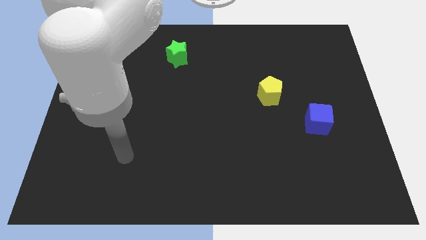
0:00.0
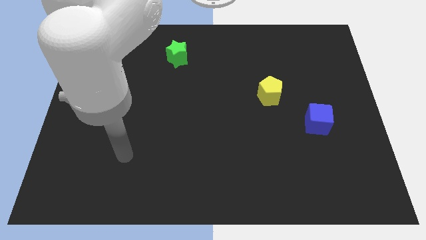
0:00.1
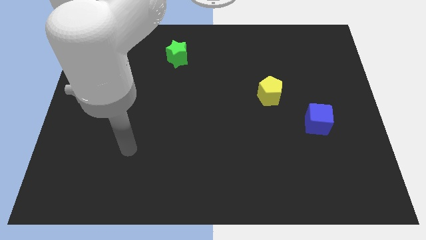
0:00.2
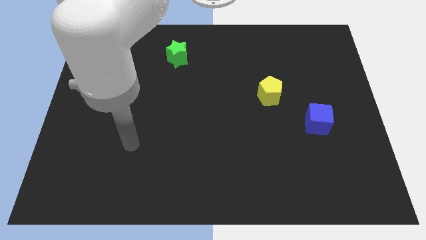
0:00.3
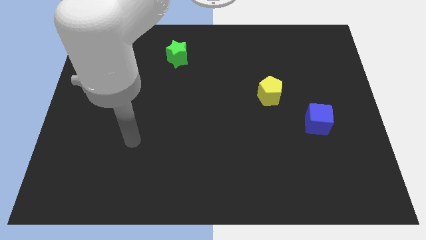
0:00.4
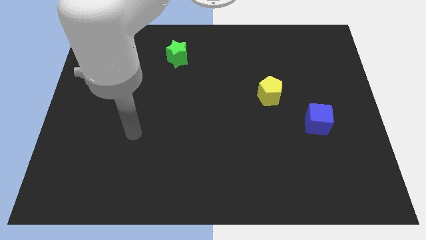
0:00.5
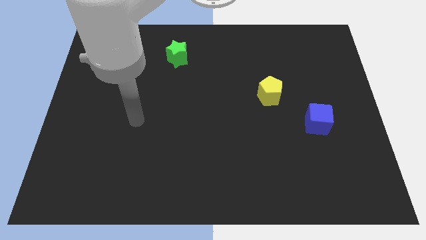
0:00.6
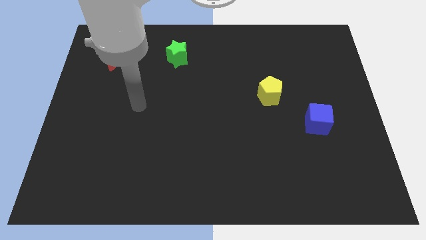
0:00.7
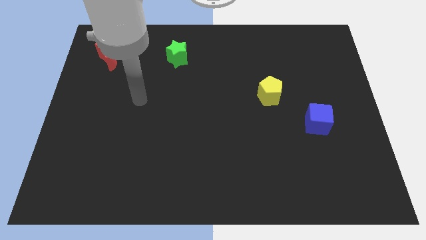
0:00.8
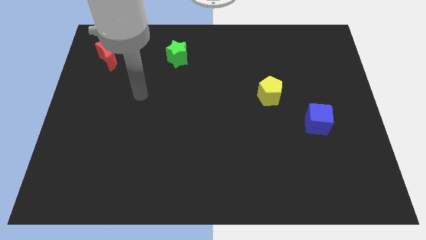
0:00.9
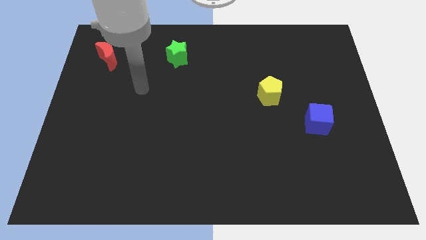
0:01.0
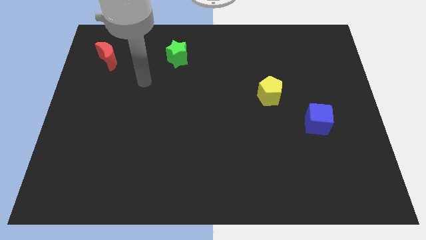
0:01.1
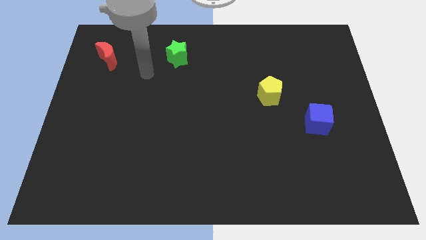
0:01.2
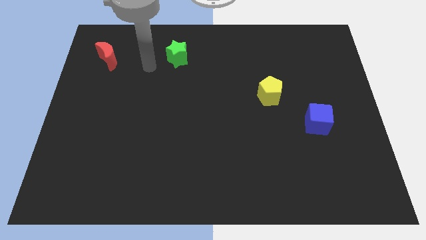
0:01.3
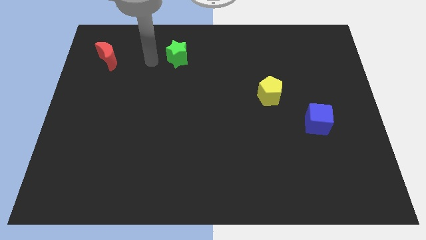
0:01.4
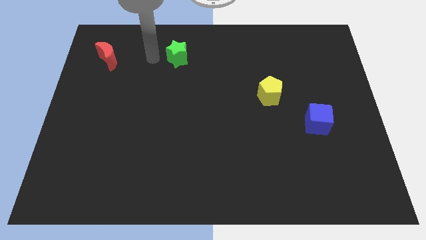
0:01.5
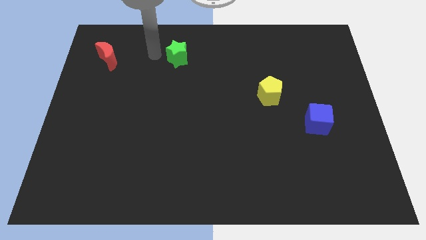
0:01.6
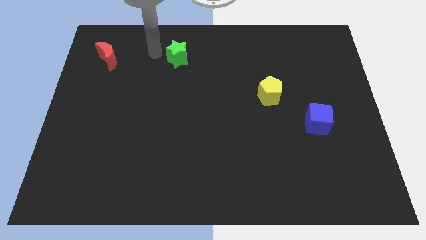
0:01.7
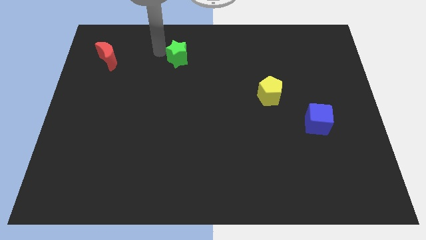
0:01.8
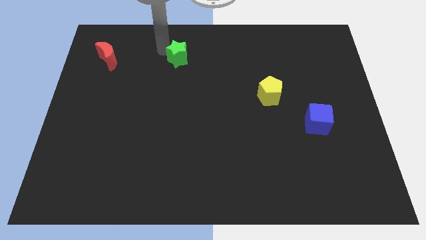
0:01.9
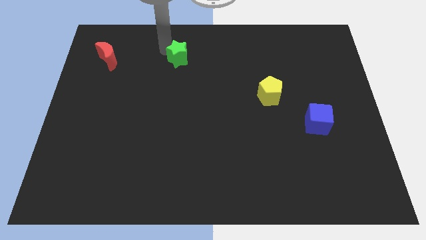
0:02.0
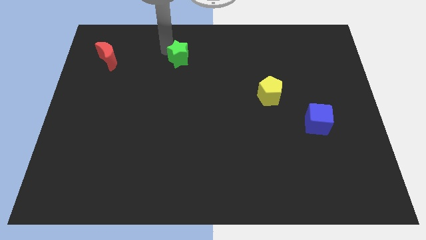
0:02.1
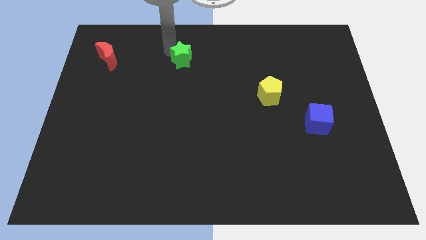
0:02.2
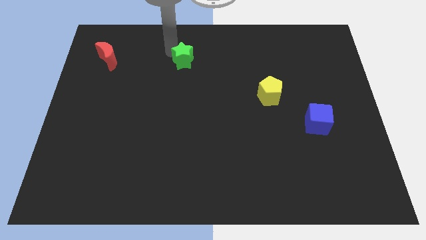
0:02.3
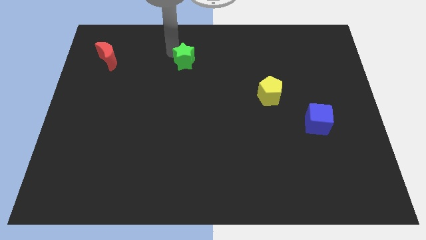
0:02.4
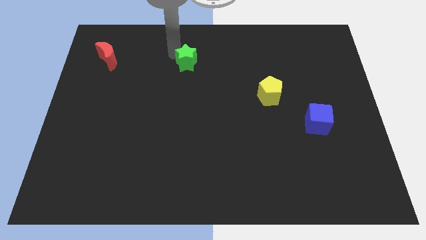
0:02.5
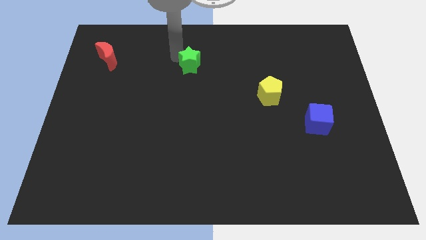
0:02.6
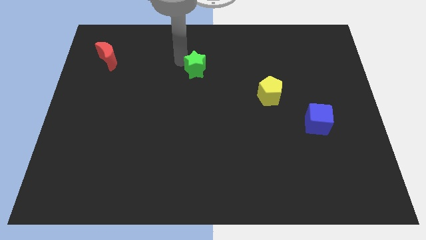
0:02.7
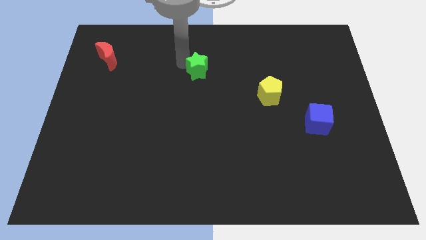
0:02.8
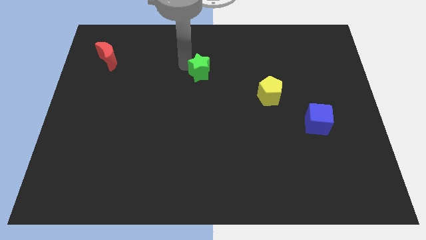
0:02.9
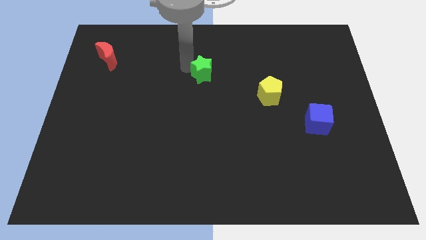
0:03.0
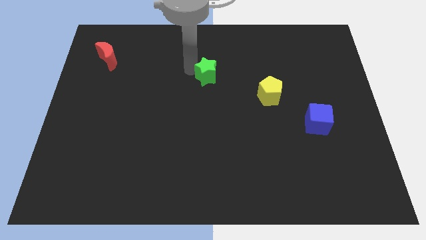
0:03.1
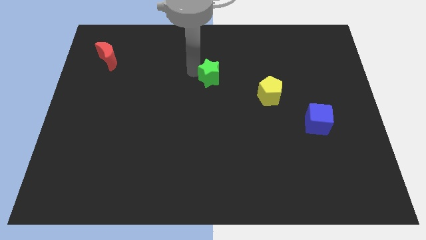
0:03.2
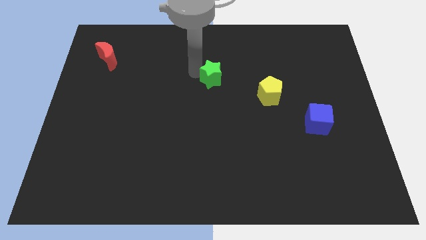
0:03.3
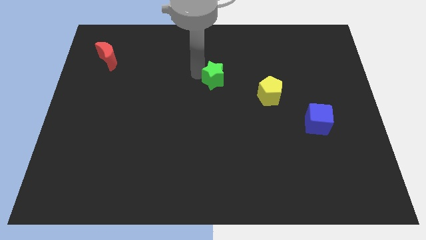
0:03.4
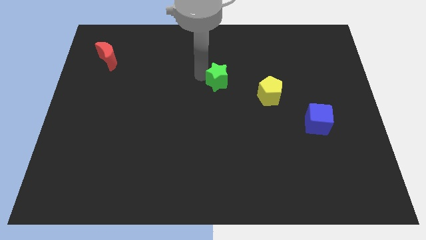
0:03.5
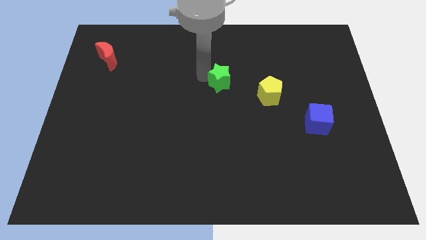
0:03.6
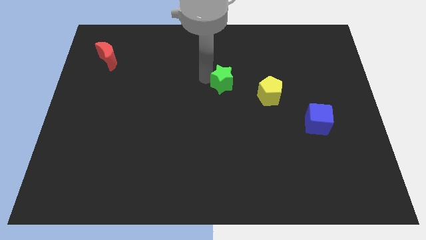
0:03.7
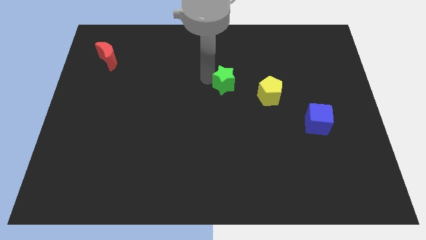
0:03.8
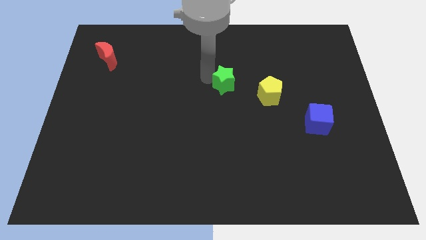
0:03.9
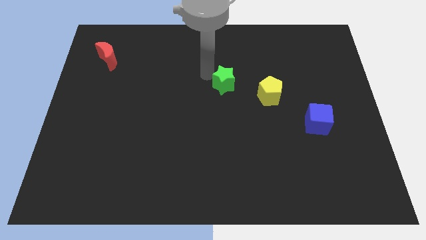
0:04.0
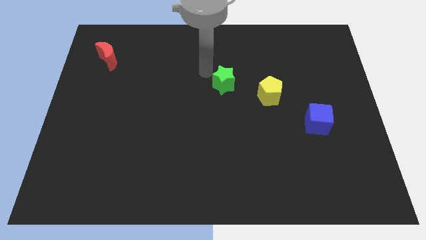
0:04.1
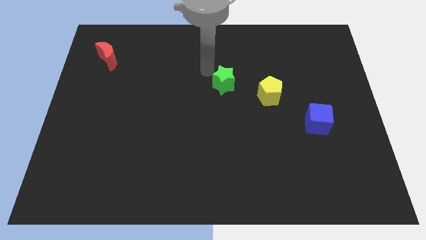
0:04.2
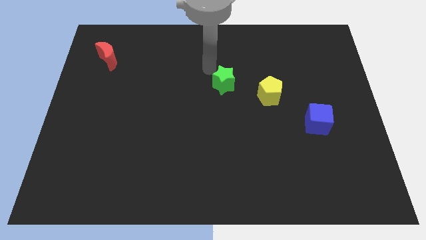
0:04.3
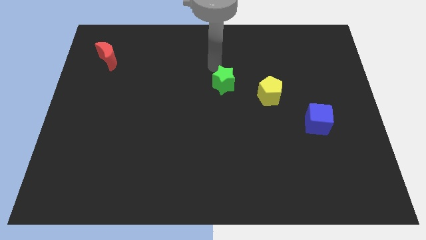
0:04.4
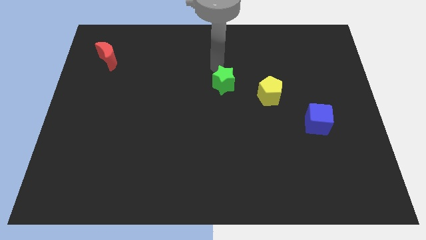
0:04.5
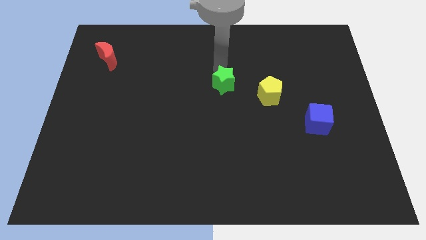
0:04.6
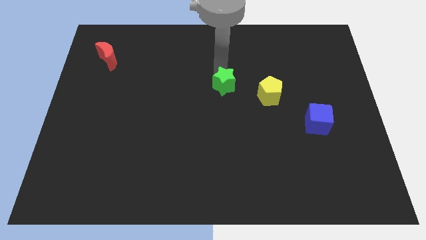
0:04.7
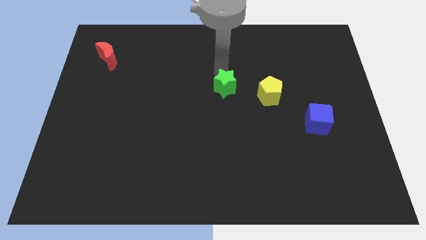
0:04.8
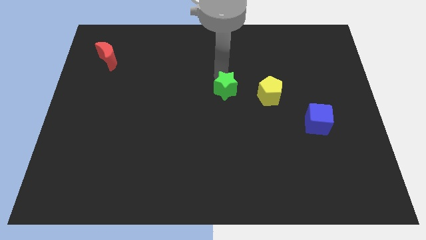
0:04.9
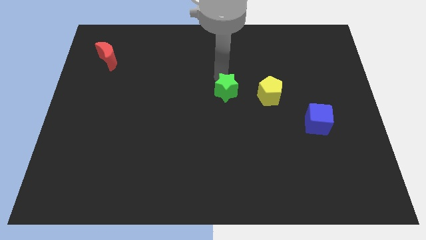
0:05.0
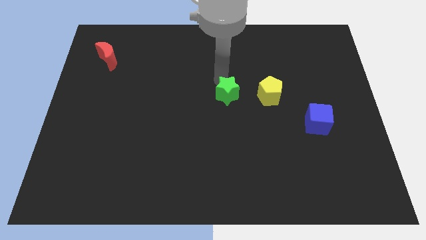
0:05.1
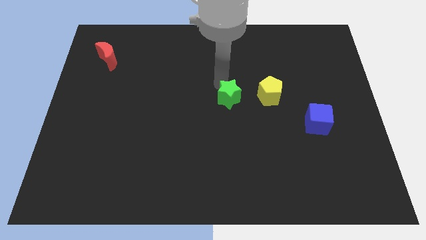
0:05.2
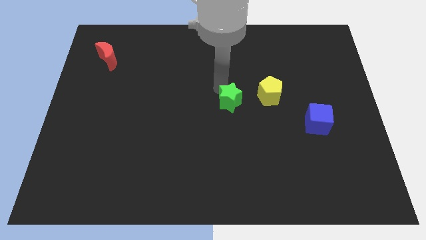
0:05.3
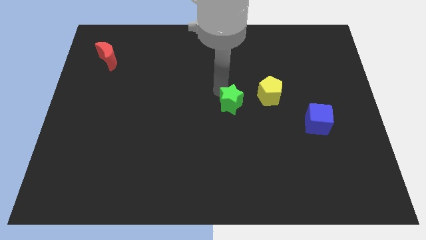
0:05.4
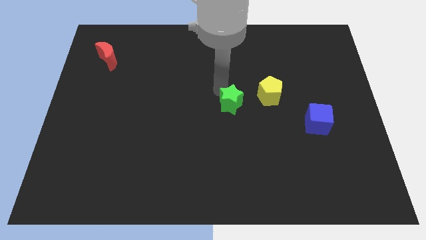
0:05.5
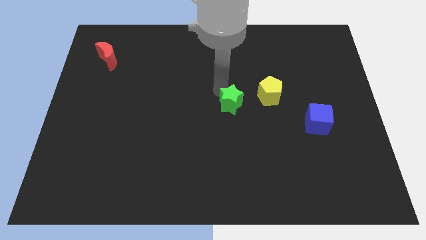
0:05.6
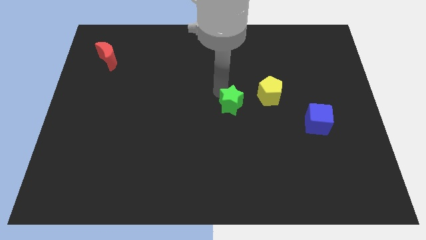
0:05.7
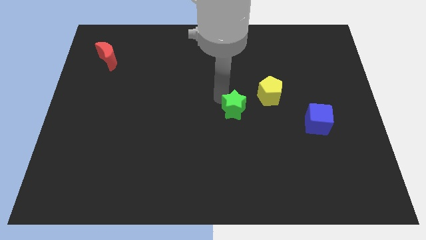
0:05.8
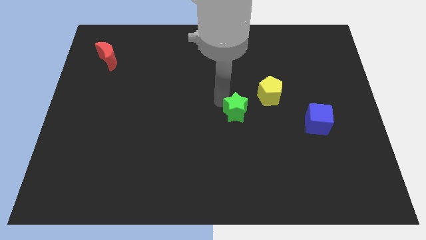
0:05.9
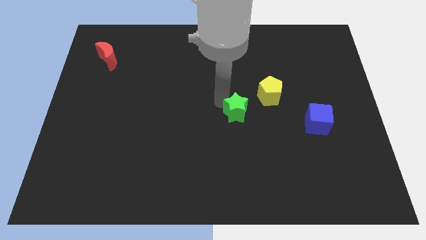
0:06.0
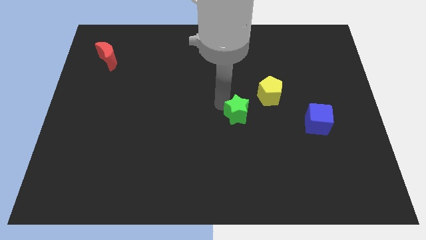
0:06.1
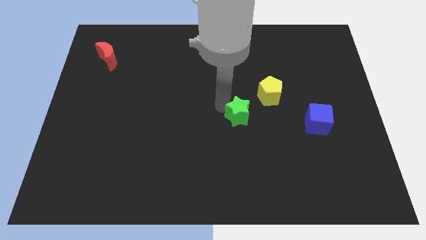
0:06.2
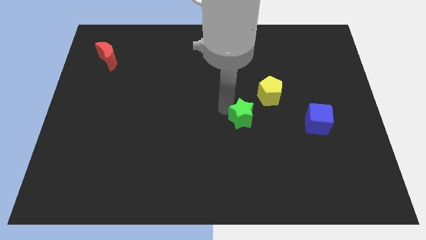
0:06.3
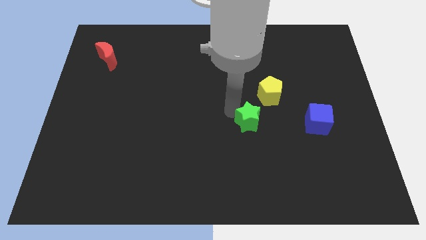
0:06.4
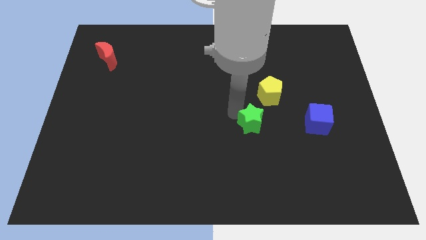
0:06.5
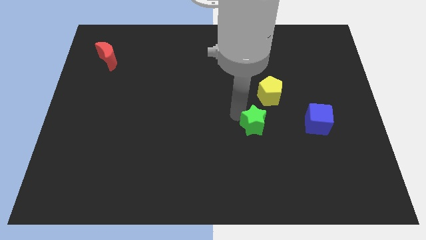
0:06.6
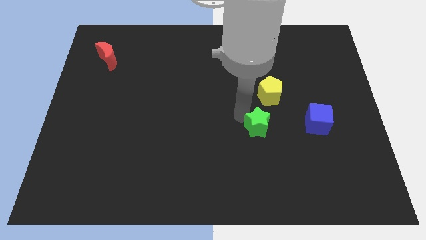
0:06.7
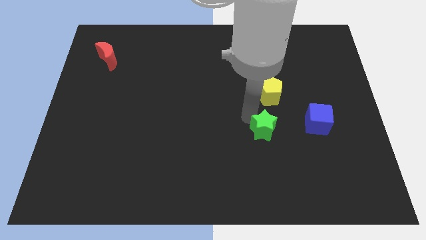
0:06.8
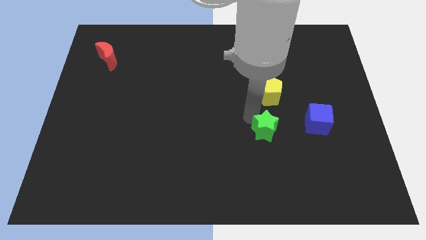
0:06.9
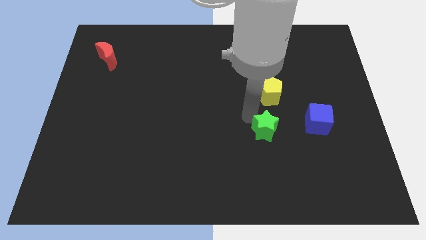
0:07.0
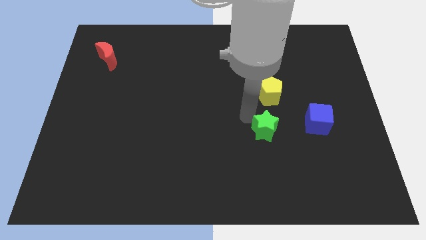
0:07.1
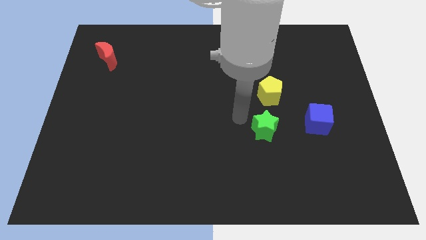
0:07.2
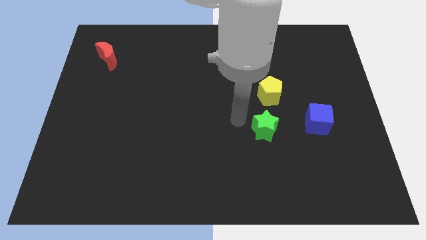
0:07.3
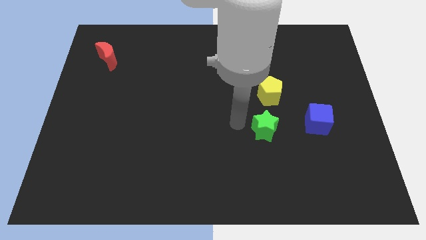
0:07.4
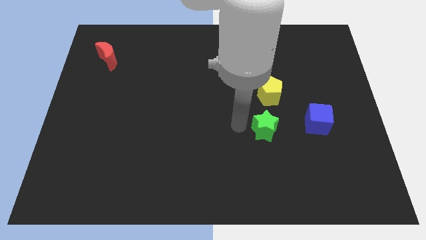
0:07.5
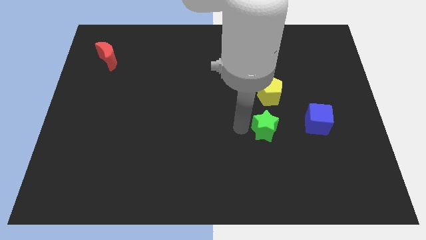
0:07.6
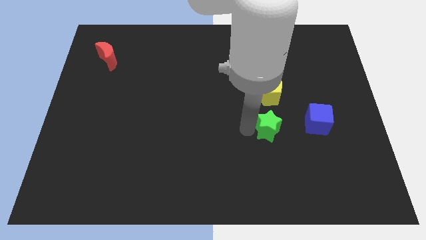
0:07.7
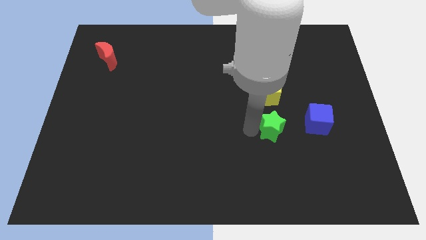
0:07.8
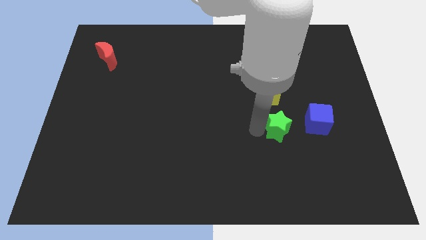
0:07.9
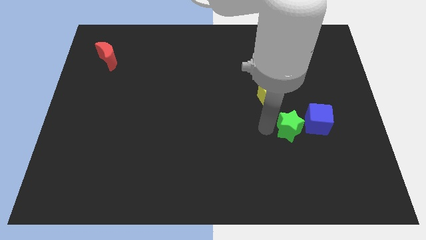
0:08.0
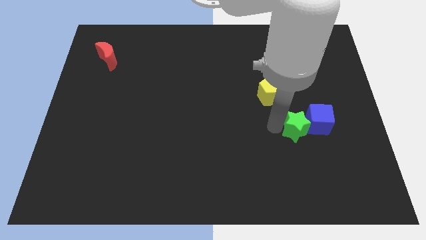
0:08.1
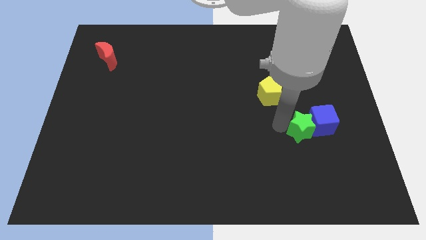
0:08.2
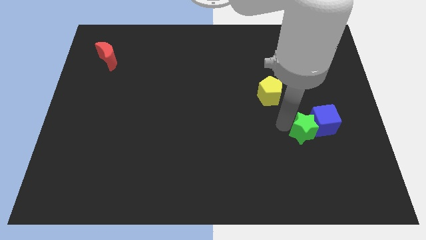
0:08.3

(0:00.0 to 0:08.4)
move the green star close to the blue block
